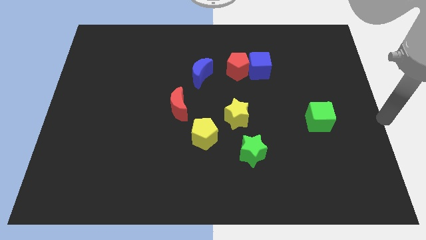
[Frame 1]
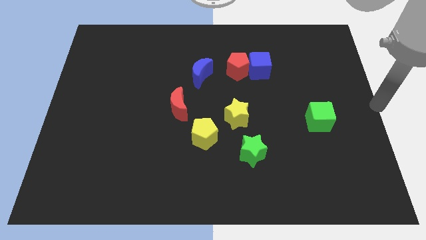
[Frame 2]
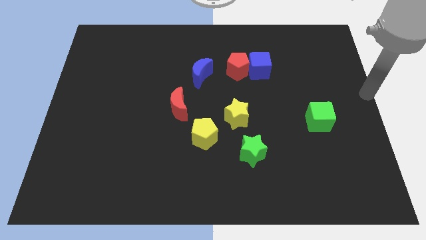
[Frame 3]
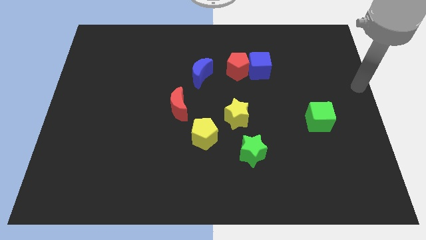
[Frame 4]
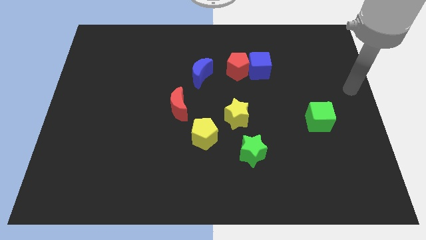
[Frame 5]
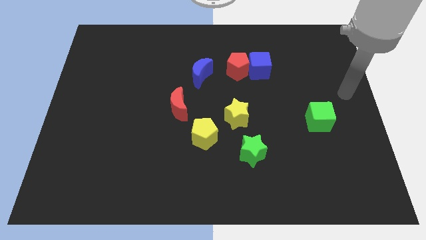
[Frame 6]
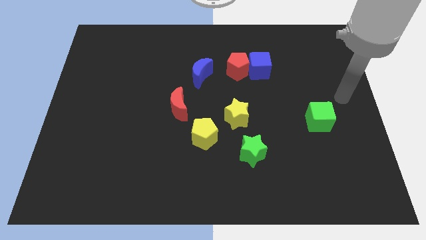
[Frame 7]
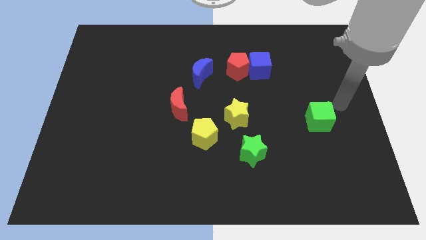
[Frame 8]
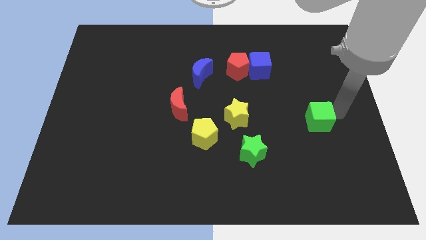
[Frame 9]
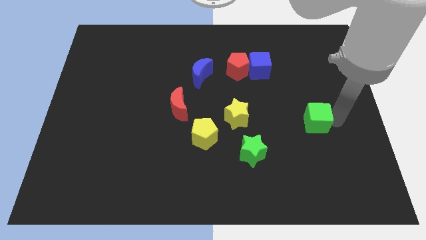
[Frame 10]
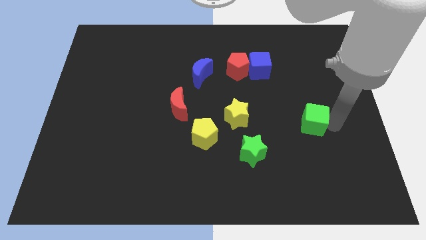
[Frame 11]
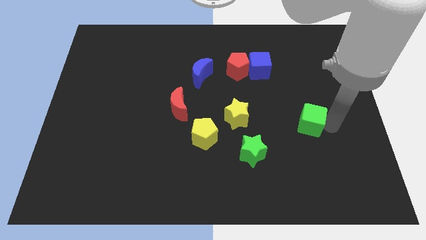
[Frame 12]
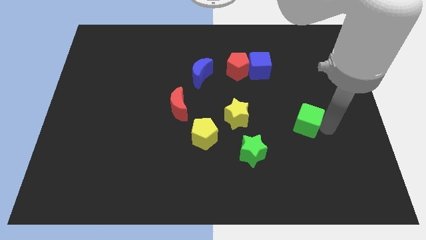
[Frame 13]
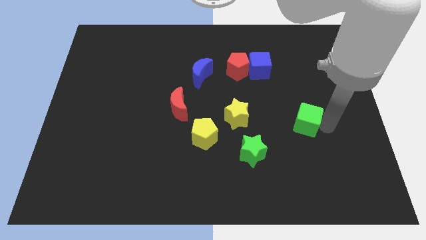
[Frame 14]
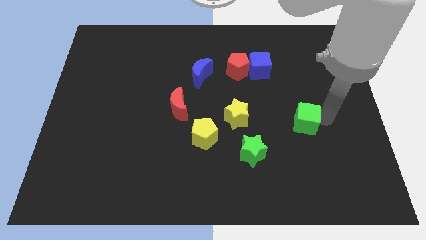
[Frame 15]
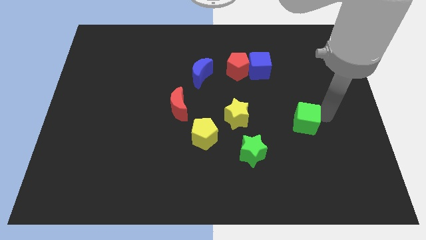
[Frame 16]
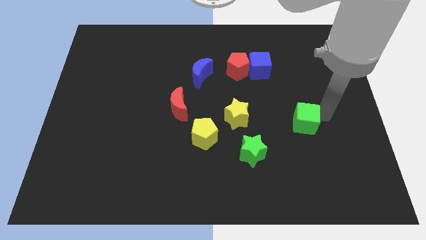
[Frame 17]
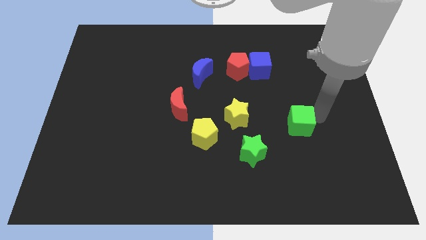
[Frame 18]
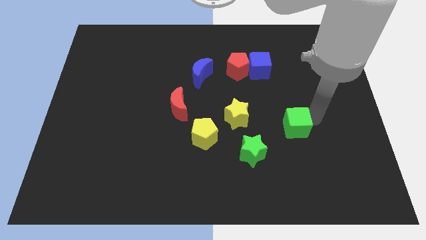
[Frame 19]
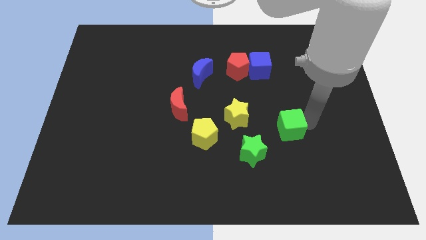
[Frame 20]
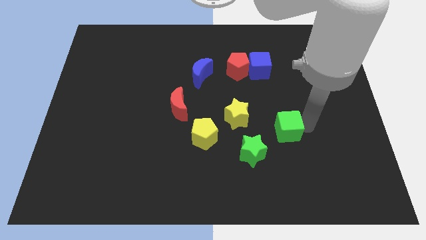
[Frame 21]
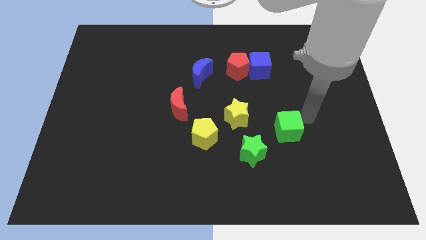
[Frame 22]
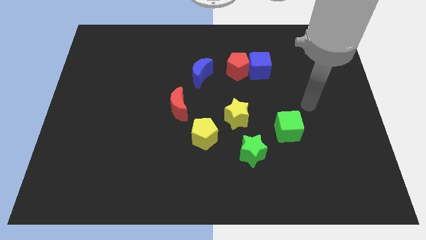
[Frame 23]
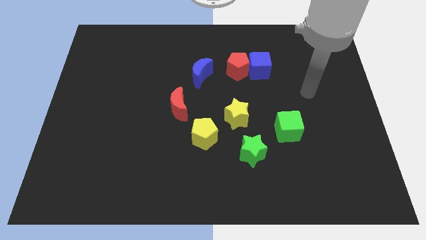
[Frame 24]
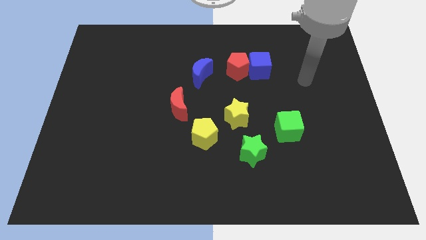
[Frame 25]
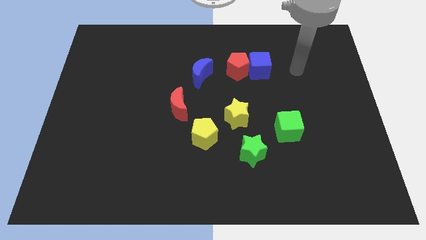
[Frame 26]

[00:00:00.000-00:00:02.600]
move green cube to the left

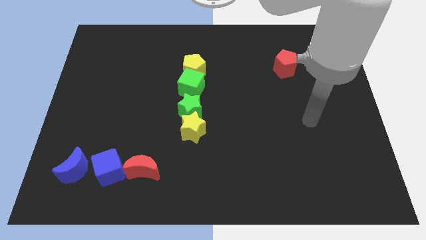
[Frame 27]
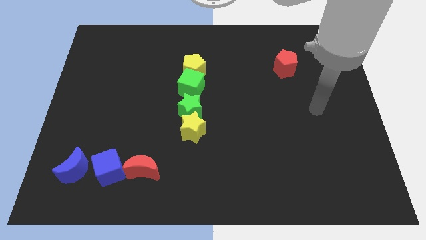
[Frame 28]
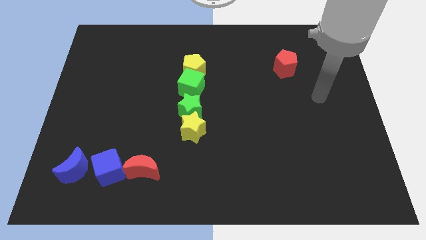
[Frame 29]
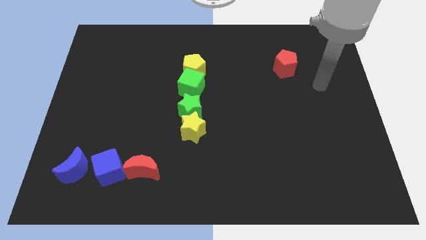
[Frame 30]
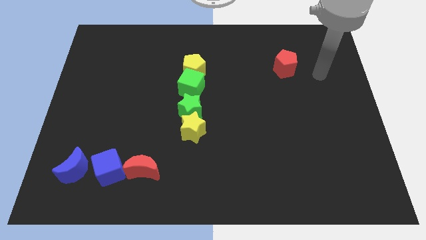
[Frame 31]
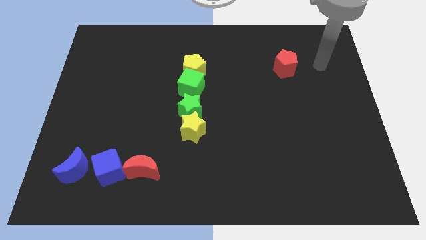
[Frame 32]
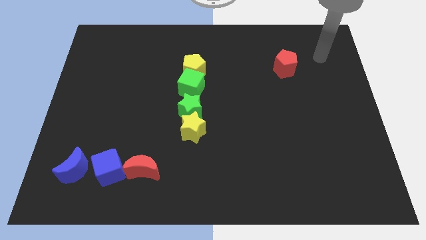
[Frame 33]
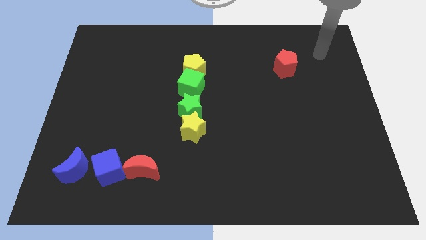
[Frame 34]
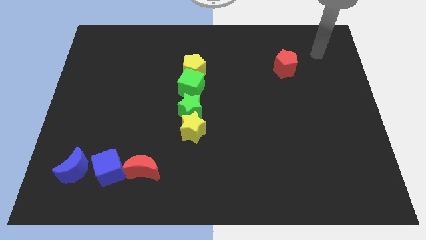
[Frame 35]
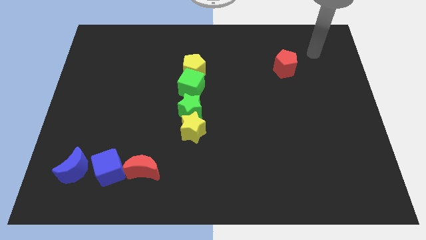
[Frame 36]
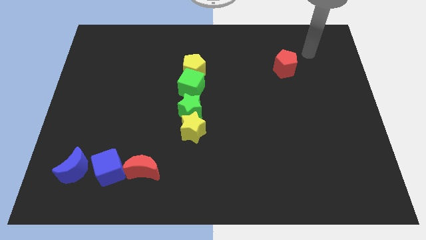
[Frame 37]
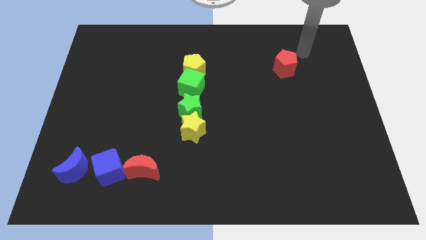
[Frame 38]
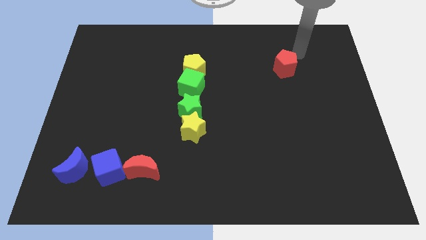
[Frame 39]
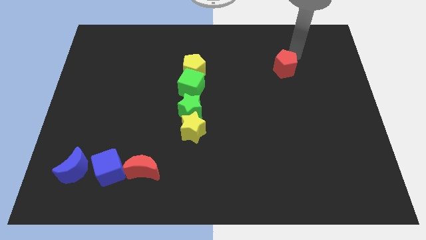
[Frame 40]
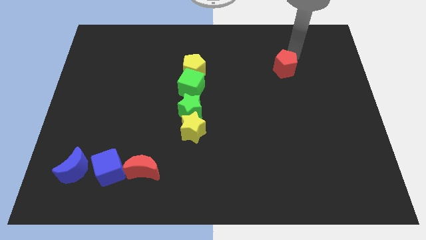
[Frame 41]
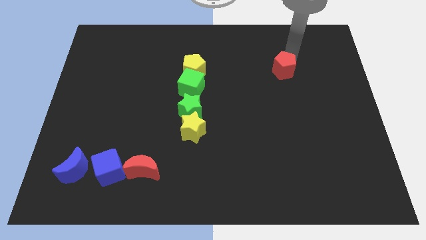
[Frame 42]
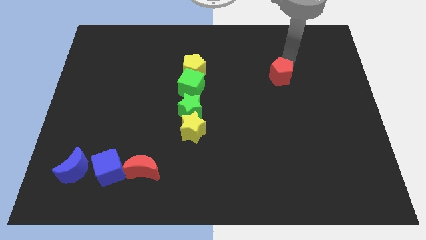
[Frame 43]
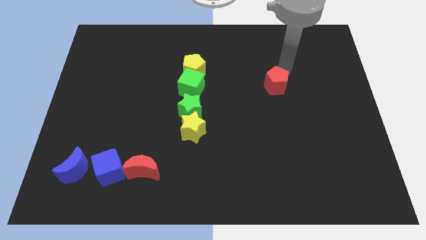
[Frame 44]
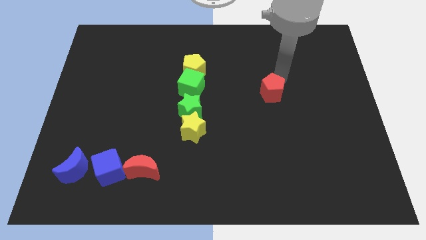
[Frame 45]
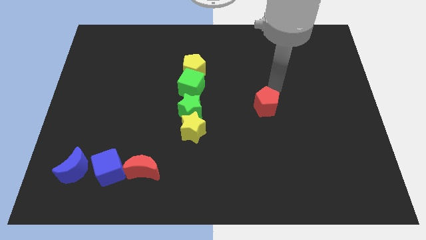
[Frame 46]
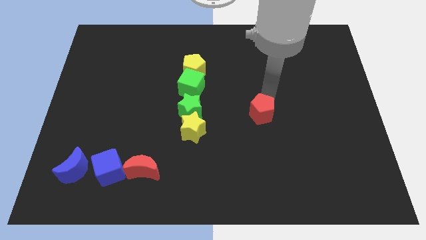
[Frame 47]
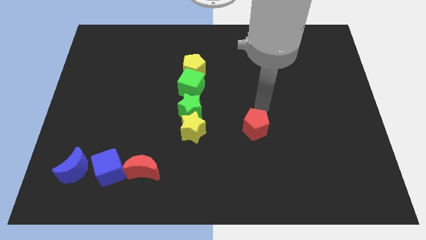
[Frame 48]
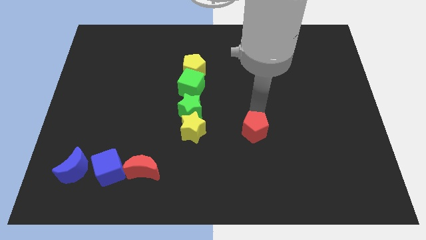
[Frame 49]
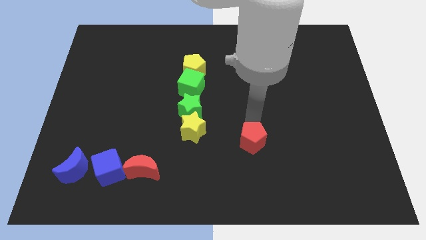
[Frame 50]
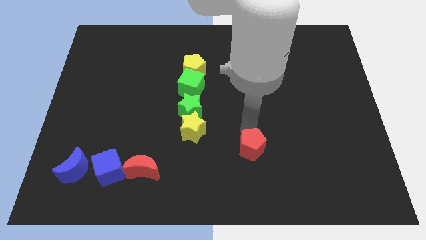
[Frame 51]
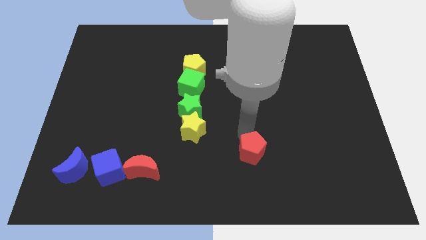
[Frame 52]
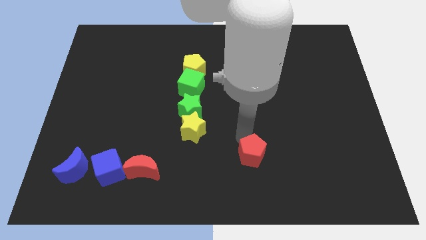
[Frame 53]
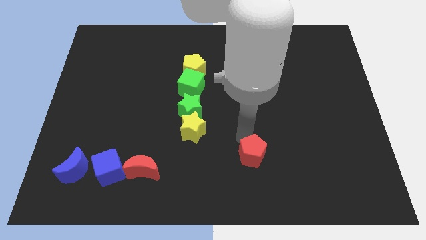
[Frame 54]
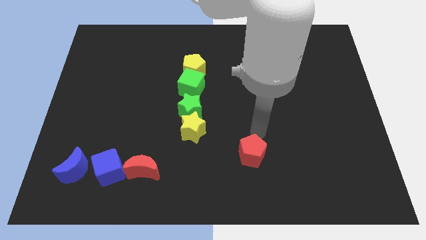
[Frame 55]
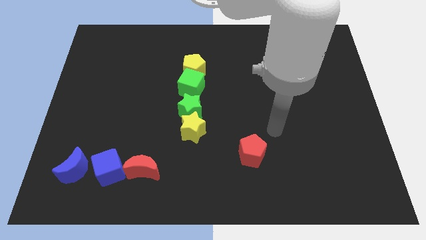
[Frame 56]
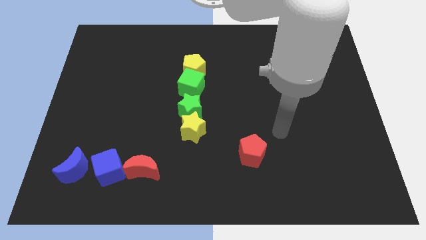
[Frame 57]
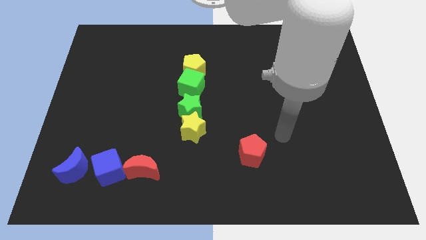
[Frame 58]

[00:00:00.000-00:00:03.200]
push the red pentagon towards the bottom side of the board

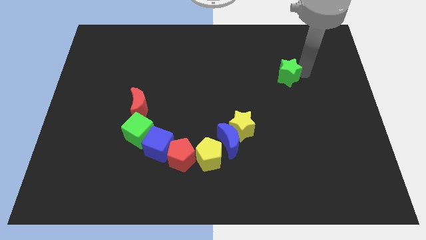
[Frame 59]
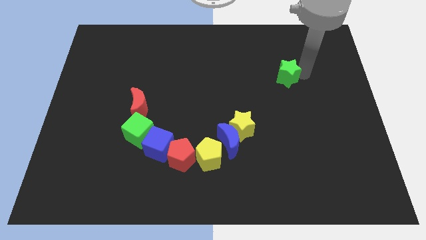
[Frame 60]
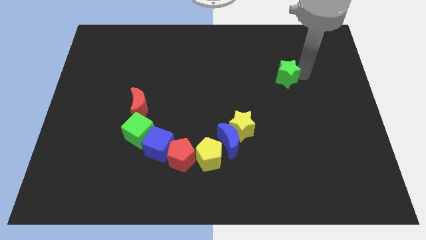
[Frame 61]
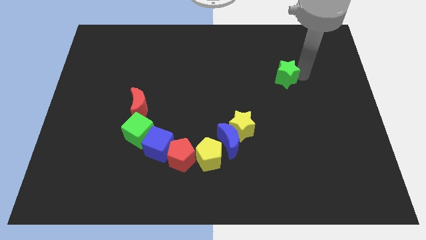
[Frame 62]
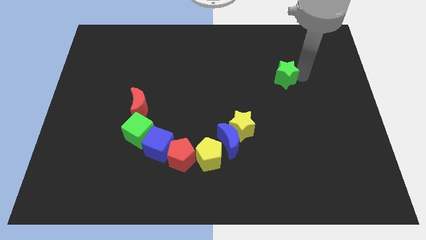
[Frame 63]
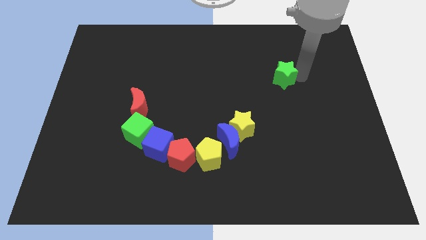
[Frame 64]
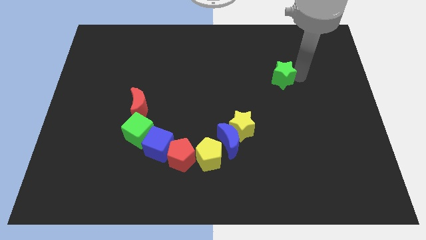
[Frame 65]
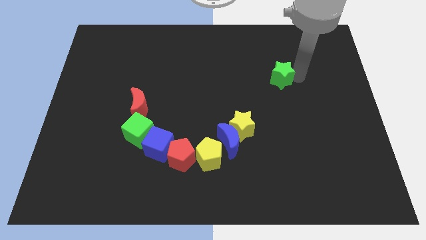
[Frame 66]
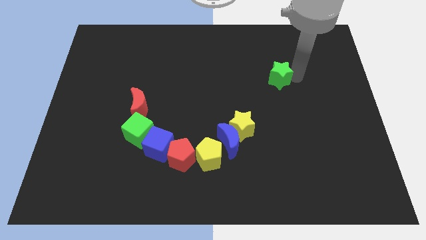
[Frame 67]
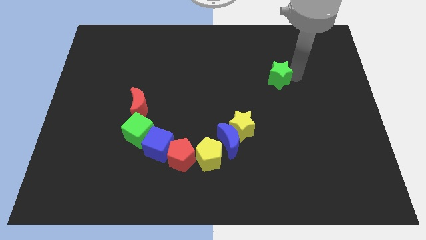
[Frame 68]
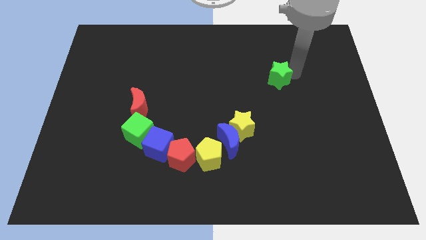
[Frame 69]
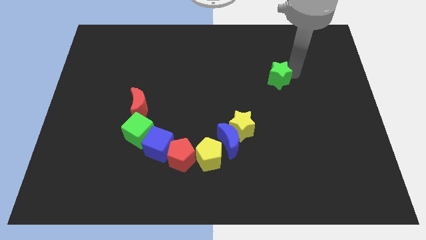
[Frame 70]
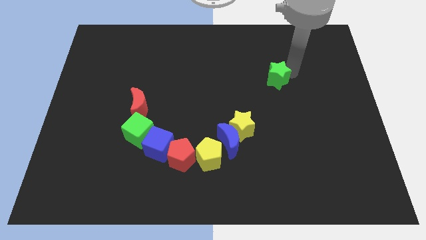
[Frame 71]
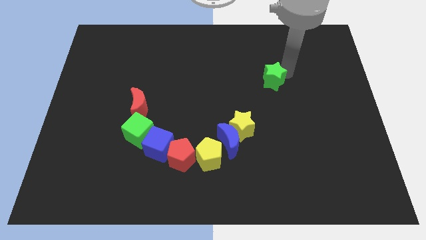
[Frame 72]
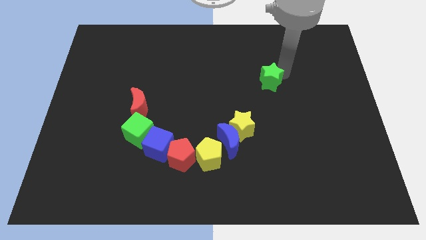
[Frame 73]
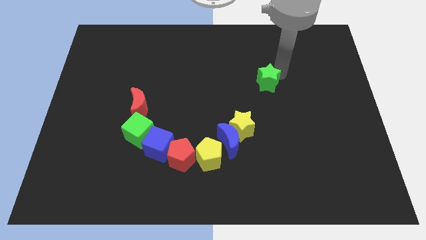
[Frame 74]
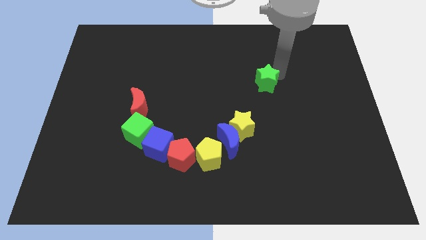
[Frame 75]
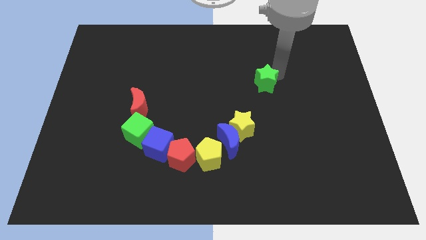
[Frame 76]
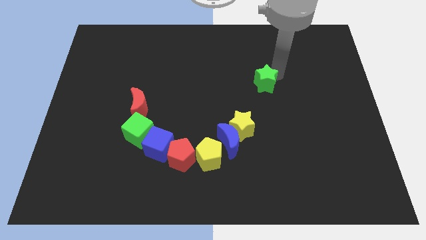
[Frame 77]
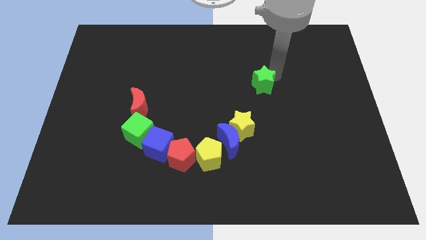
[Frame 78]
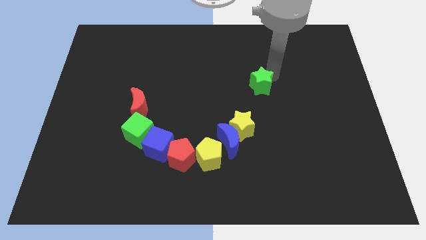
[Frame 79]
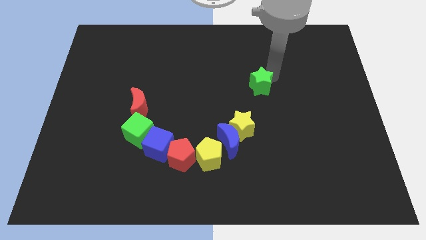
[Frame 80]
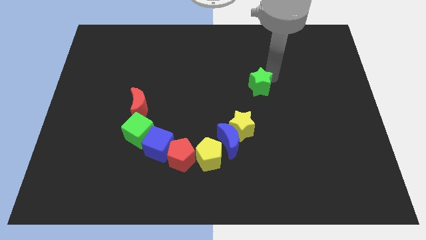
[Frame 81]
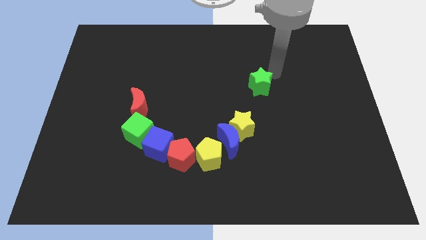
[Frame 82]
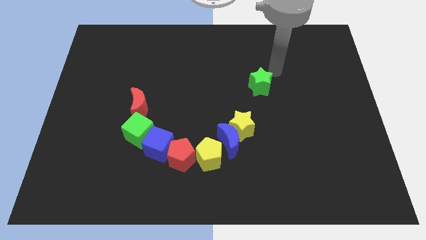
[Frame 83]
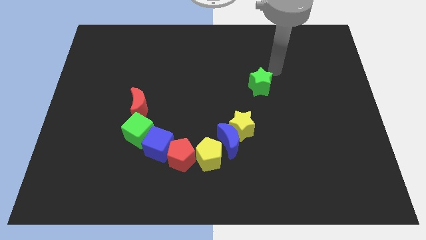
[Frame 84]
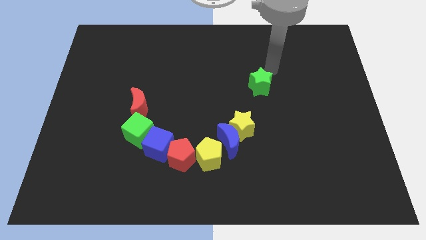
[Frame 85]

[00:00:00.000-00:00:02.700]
push the green star diagonal to the red crescent

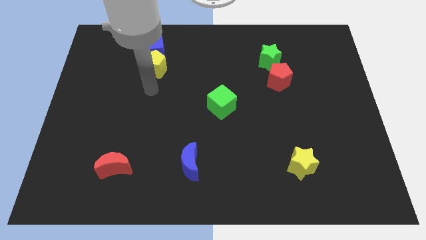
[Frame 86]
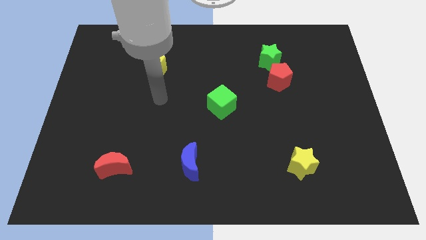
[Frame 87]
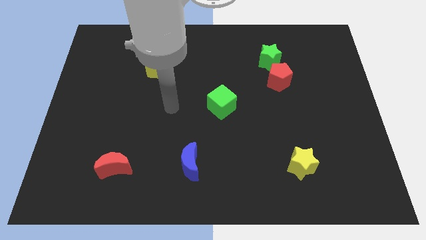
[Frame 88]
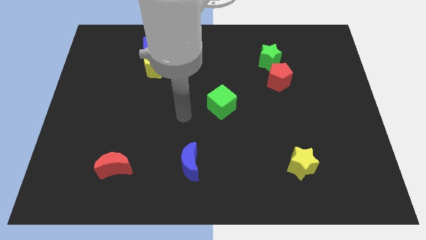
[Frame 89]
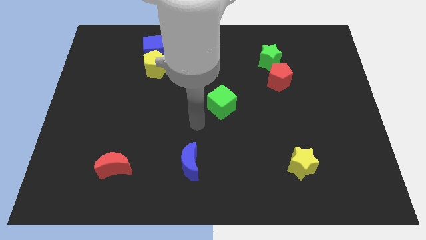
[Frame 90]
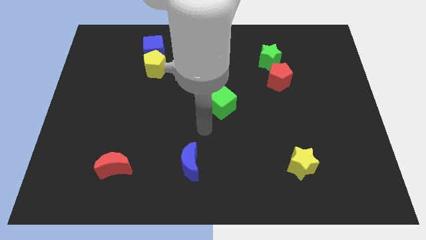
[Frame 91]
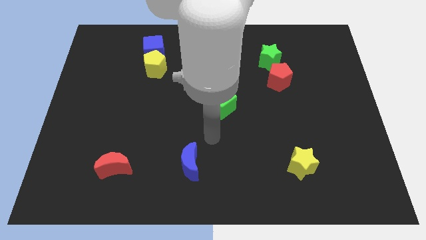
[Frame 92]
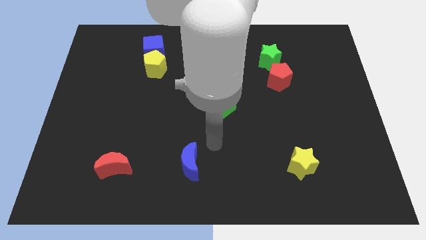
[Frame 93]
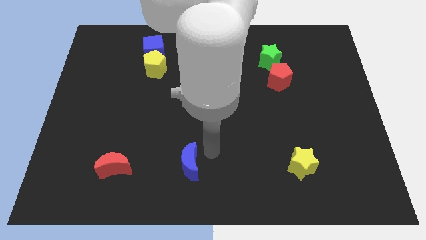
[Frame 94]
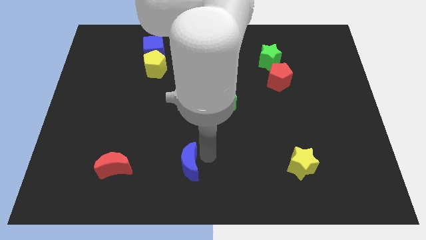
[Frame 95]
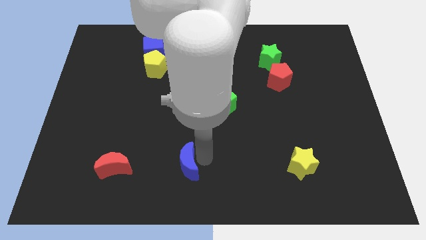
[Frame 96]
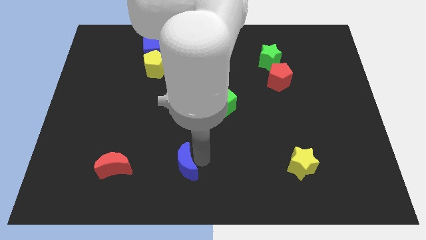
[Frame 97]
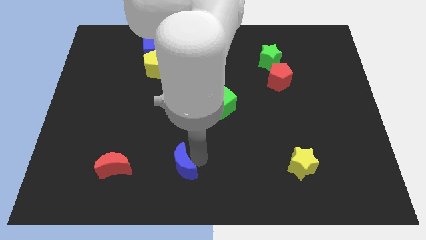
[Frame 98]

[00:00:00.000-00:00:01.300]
touch the right side of the blue crescent
